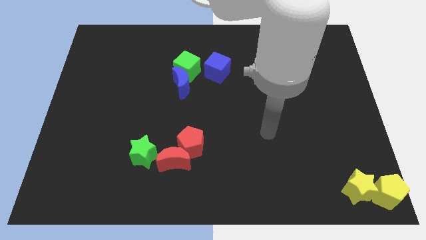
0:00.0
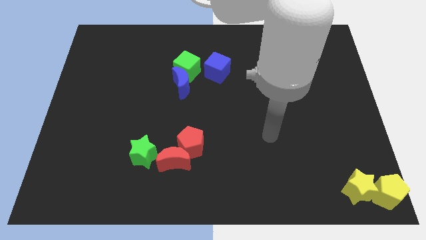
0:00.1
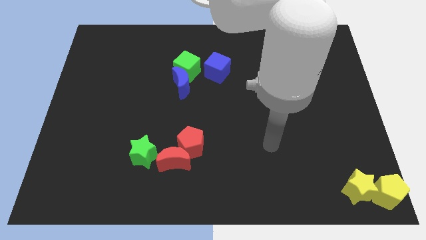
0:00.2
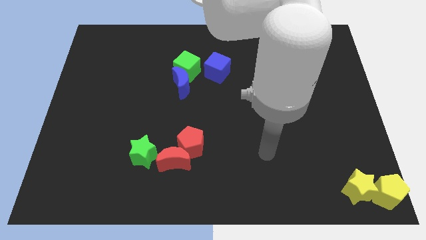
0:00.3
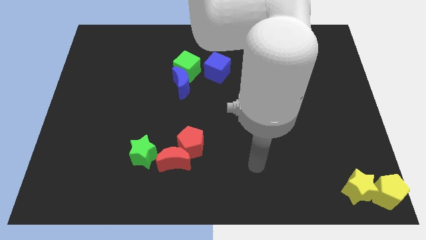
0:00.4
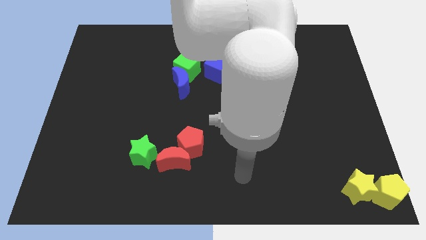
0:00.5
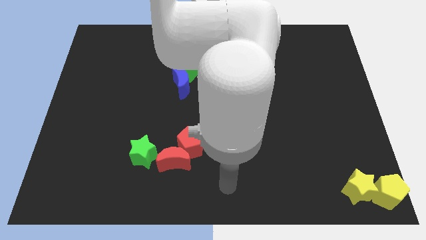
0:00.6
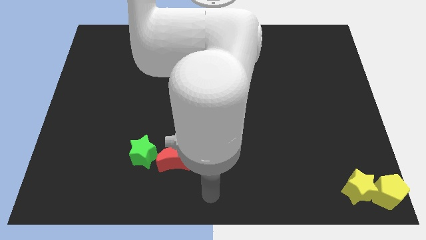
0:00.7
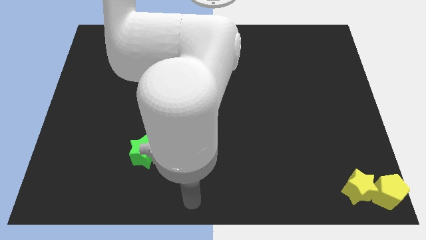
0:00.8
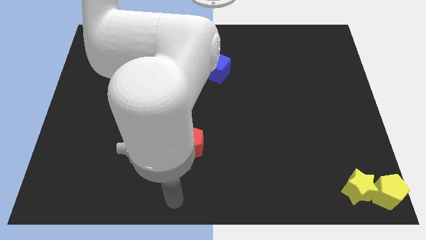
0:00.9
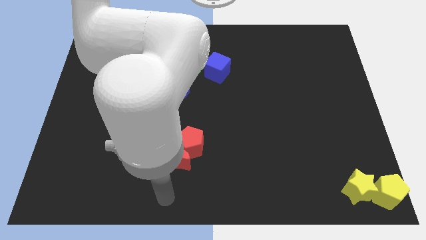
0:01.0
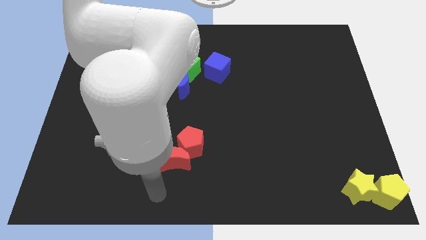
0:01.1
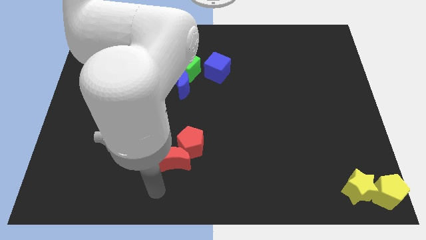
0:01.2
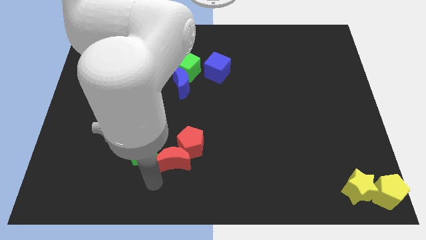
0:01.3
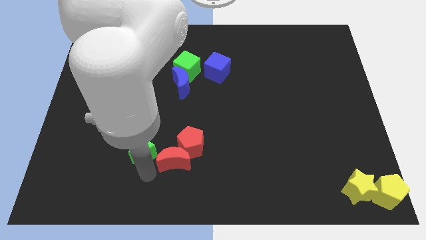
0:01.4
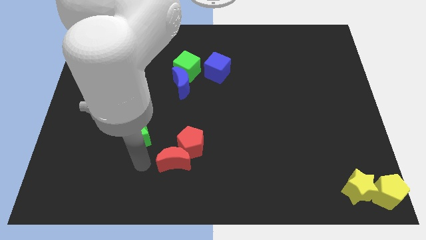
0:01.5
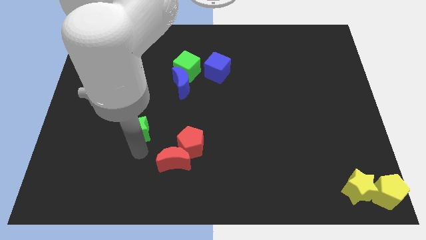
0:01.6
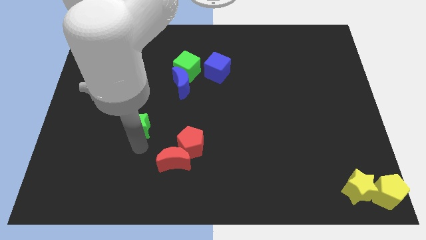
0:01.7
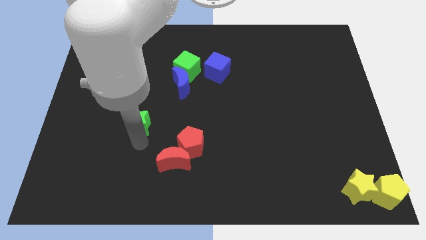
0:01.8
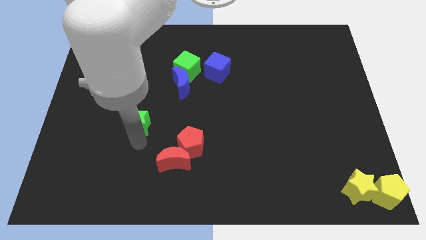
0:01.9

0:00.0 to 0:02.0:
slide the green star up slightly

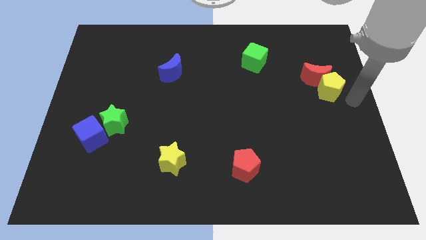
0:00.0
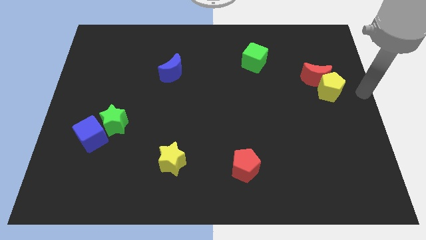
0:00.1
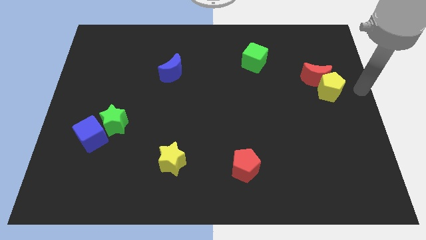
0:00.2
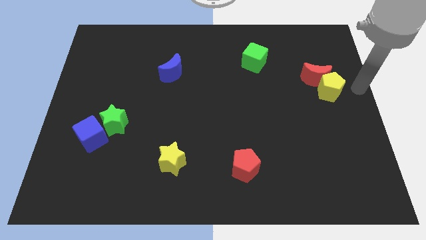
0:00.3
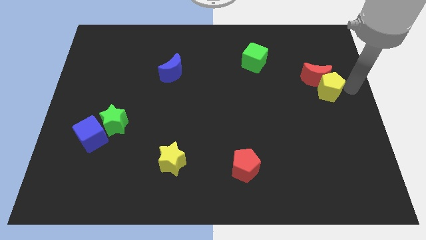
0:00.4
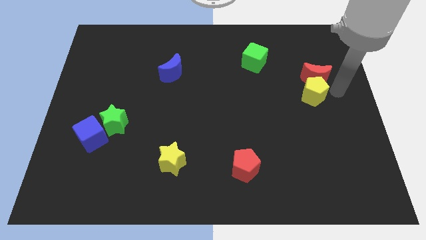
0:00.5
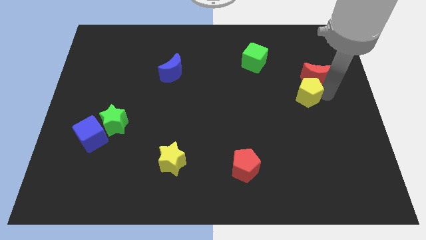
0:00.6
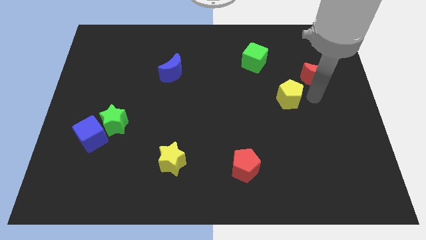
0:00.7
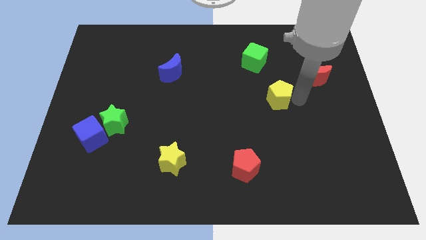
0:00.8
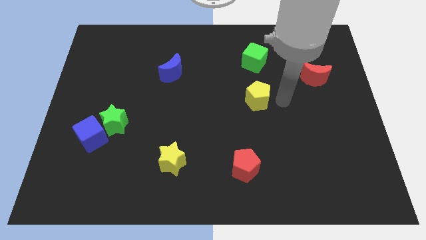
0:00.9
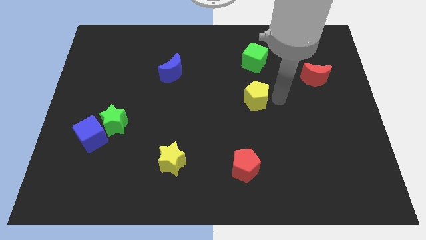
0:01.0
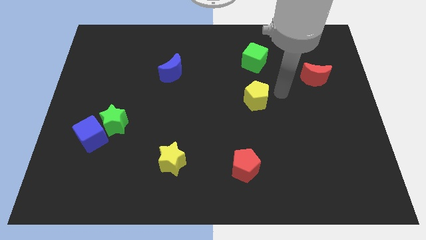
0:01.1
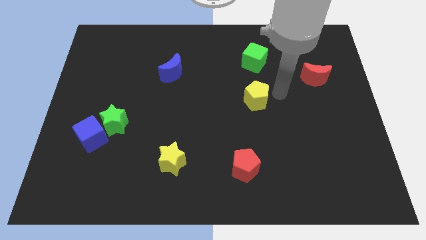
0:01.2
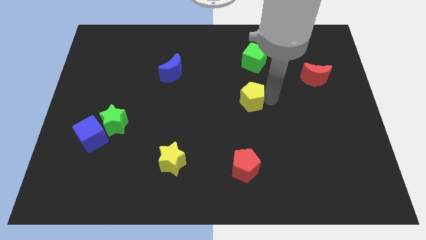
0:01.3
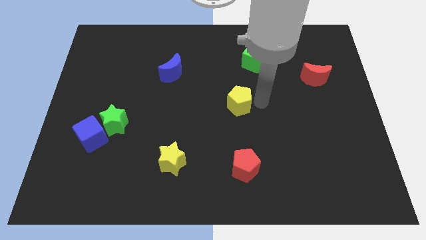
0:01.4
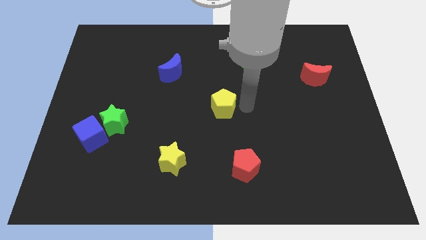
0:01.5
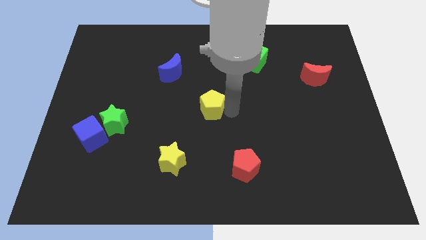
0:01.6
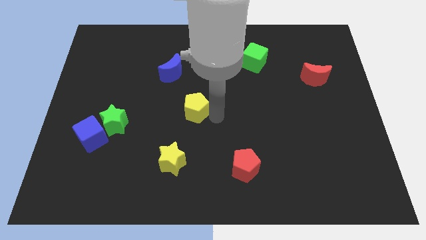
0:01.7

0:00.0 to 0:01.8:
put the yellow pentagon between the blue moon and red pentagon

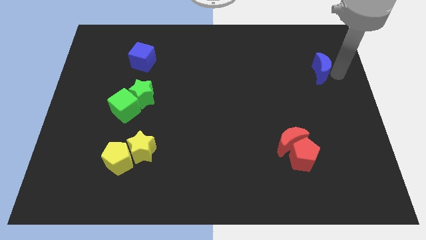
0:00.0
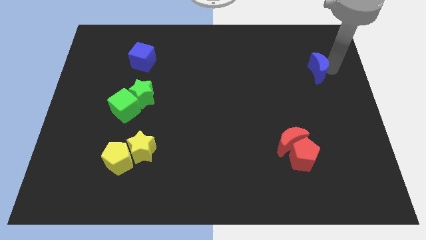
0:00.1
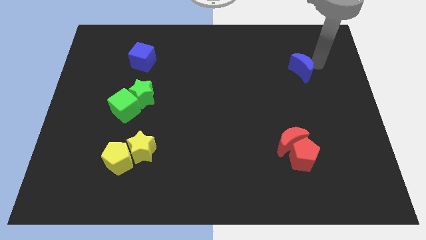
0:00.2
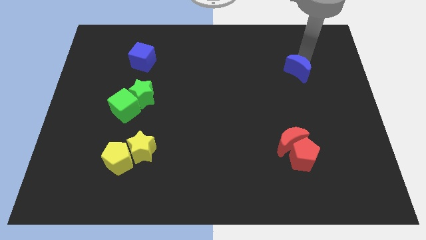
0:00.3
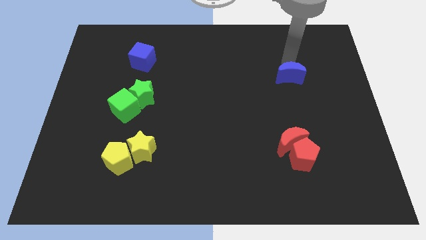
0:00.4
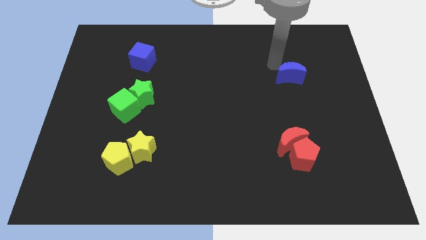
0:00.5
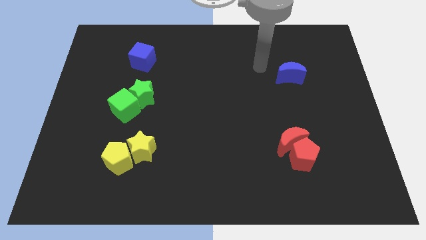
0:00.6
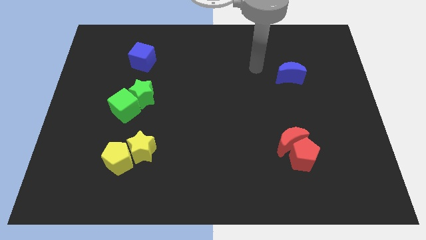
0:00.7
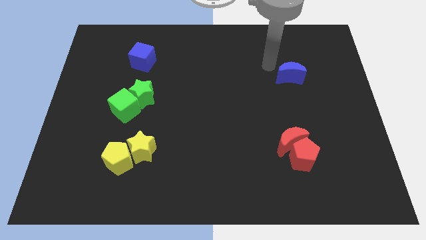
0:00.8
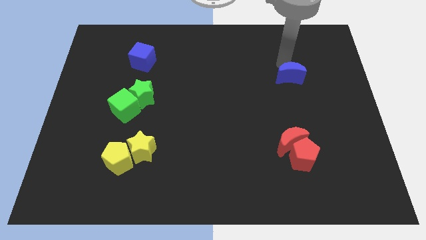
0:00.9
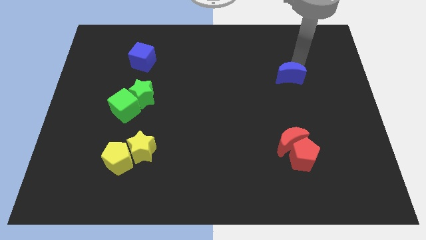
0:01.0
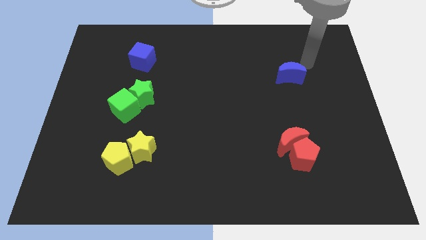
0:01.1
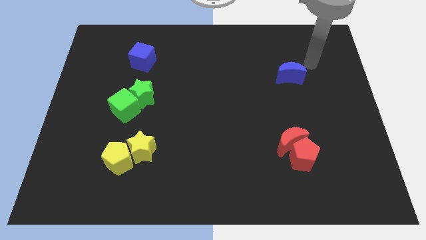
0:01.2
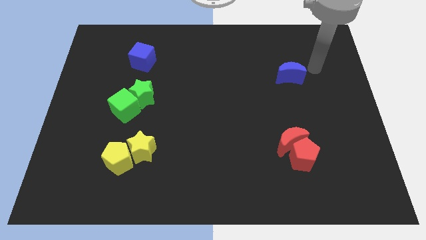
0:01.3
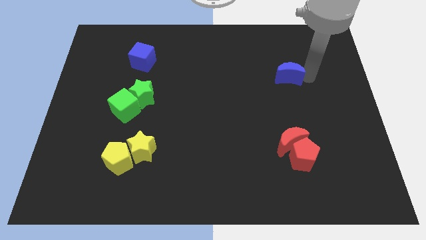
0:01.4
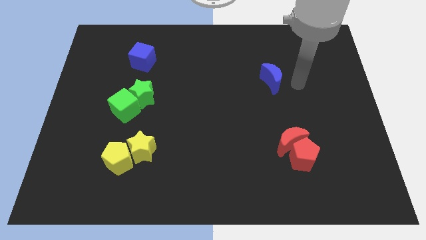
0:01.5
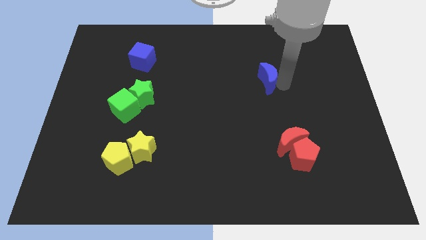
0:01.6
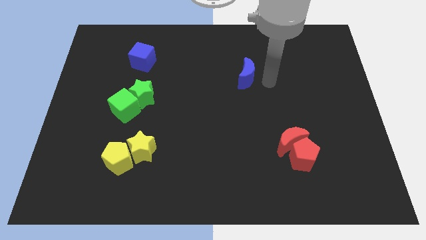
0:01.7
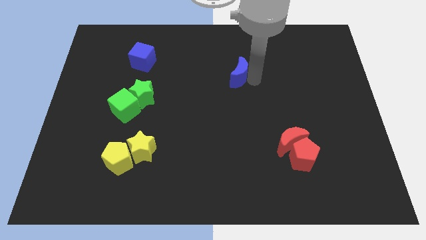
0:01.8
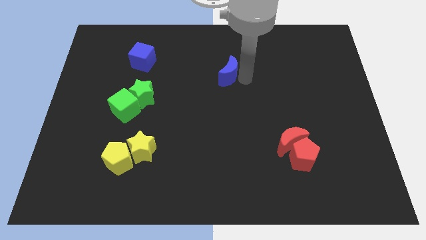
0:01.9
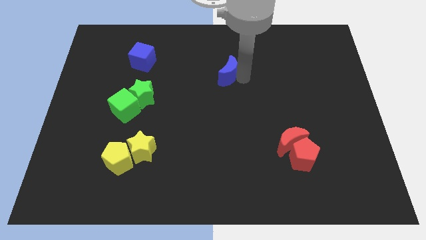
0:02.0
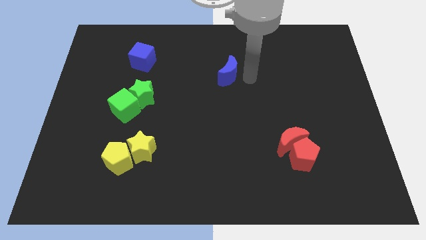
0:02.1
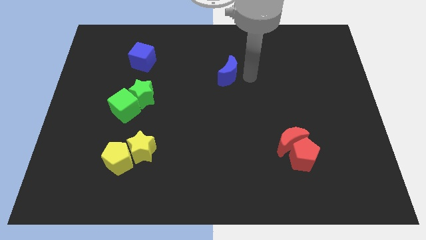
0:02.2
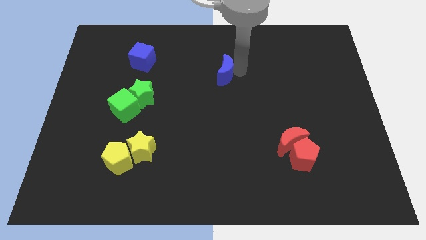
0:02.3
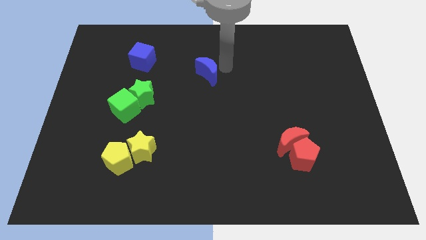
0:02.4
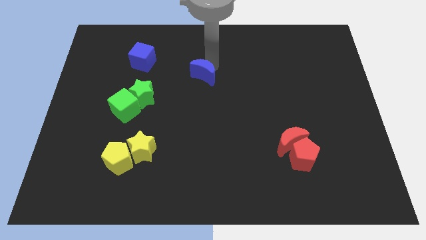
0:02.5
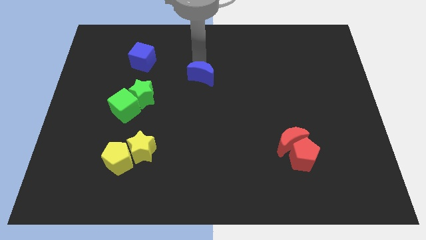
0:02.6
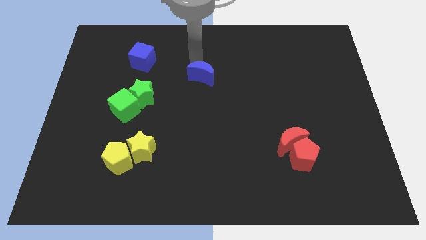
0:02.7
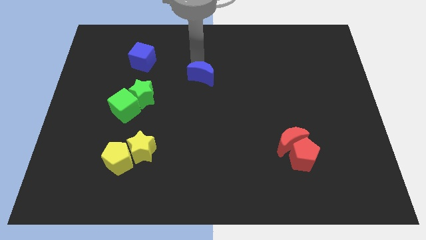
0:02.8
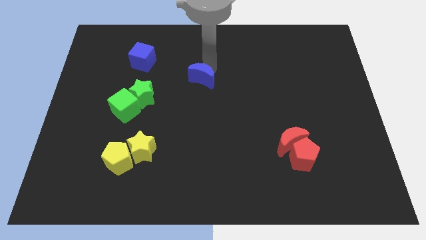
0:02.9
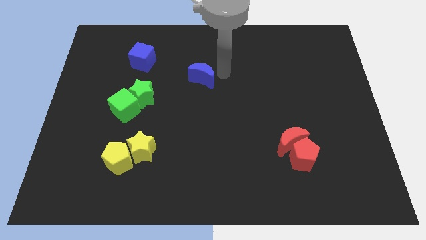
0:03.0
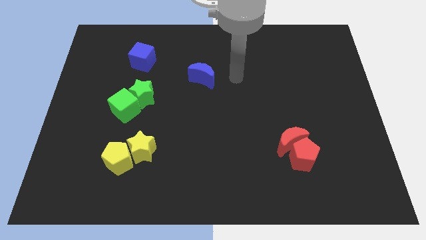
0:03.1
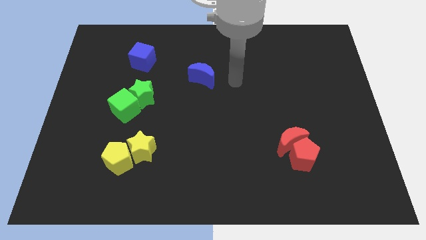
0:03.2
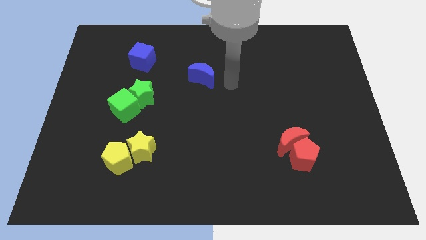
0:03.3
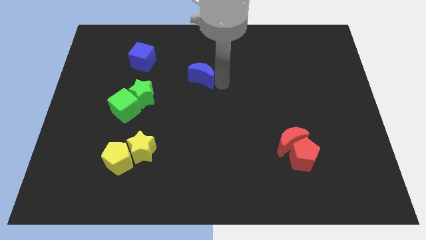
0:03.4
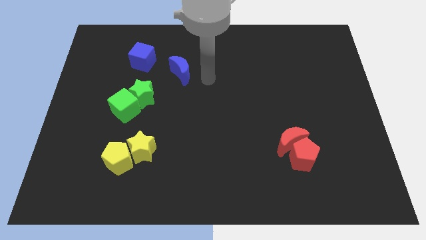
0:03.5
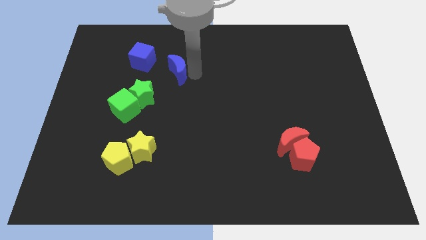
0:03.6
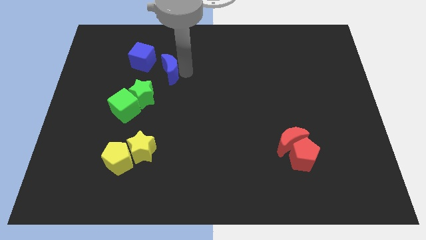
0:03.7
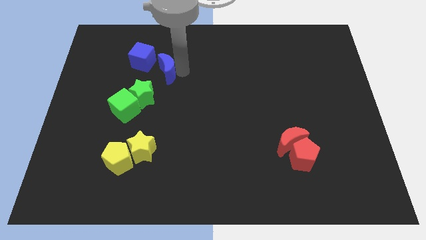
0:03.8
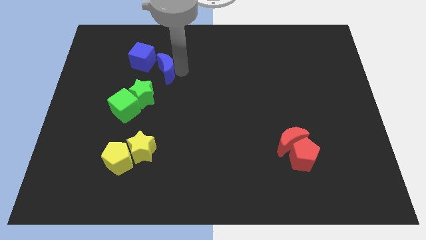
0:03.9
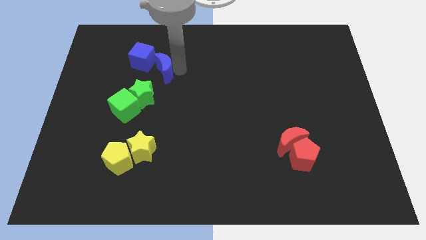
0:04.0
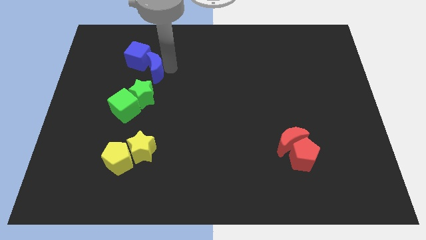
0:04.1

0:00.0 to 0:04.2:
push blue crescent into the blue cube

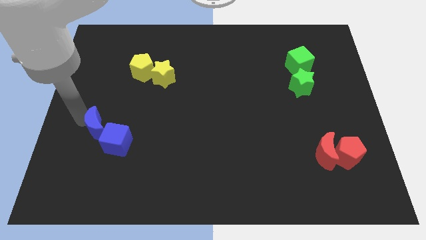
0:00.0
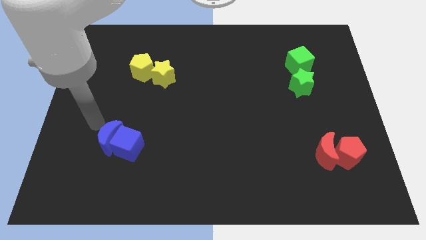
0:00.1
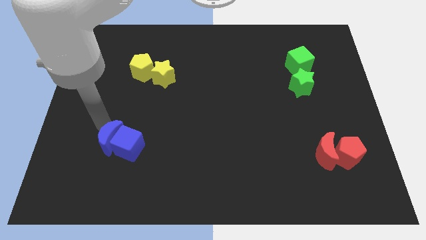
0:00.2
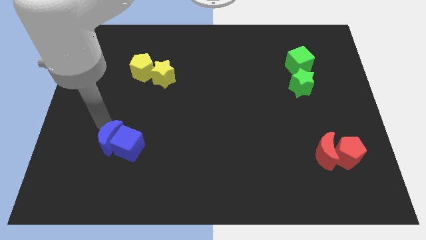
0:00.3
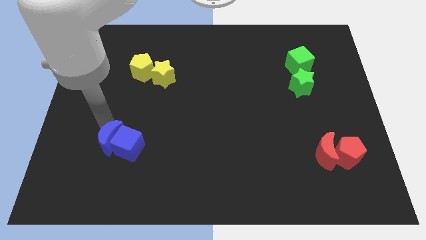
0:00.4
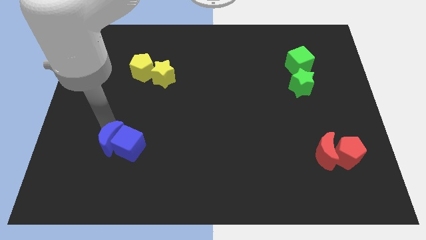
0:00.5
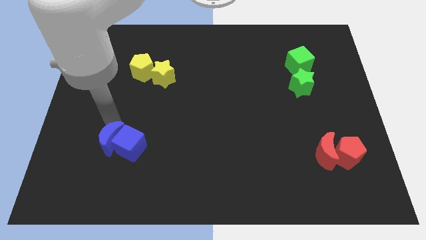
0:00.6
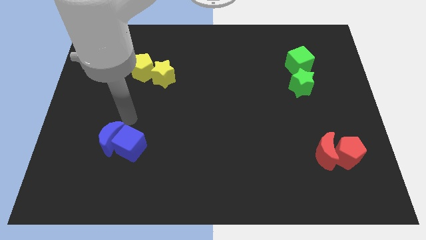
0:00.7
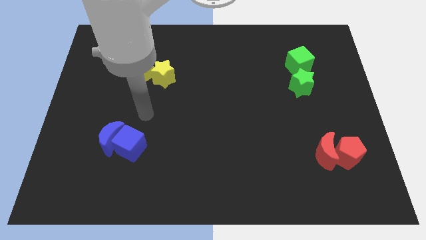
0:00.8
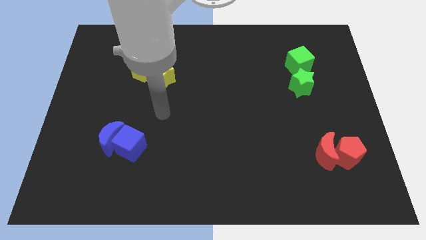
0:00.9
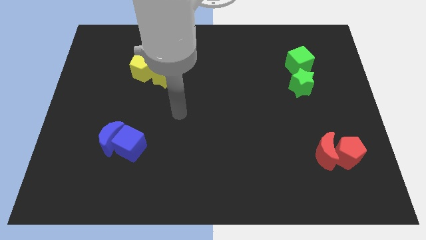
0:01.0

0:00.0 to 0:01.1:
slide blue moon into blue cube
